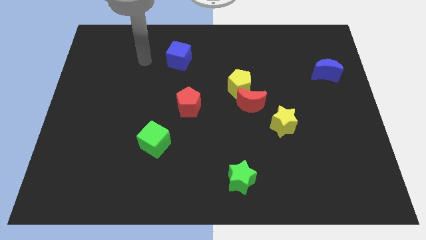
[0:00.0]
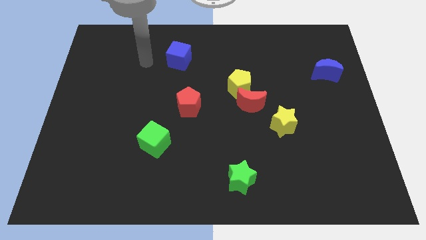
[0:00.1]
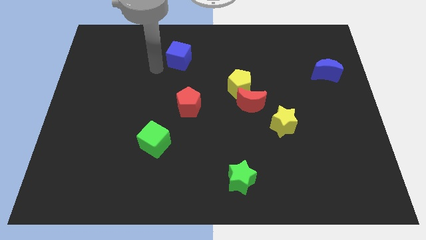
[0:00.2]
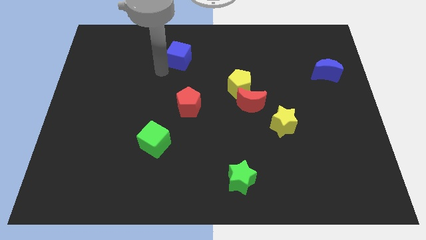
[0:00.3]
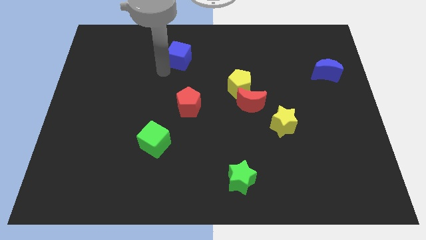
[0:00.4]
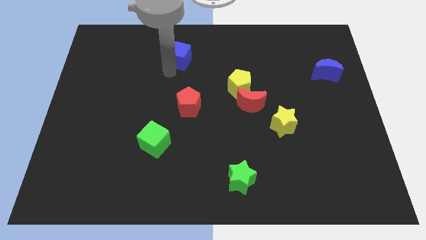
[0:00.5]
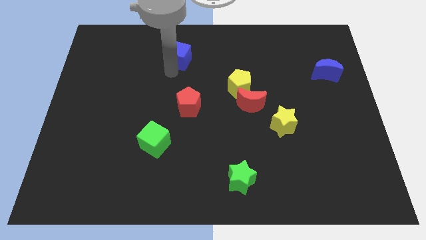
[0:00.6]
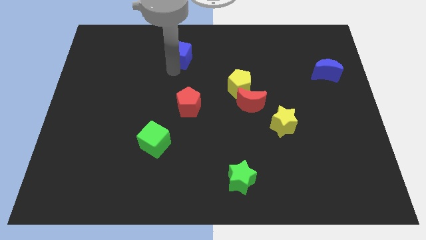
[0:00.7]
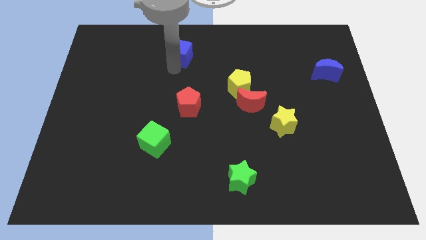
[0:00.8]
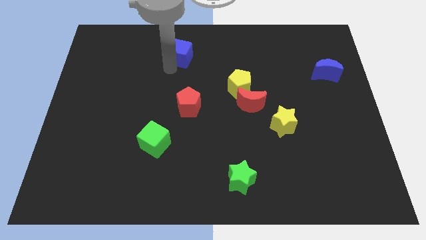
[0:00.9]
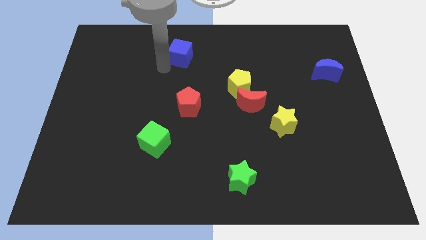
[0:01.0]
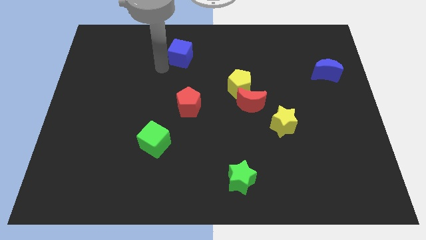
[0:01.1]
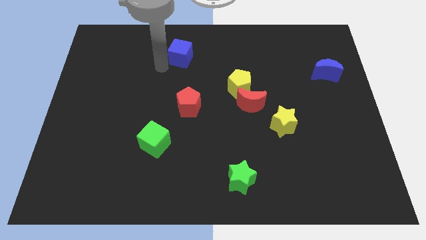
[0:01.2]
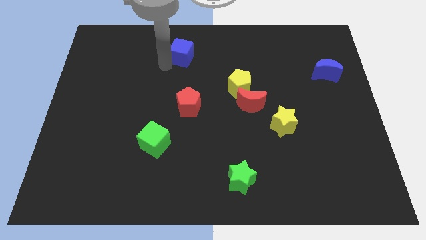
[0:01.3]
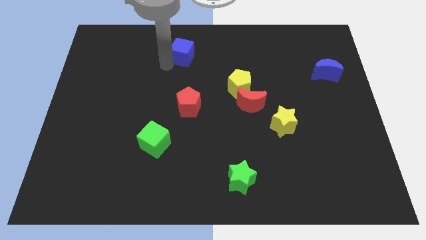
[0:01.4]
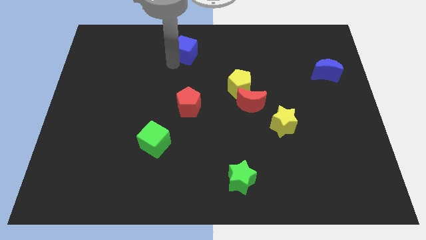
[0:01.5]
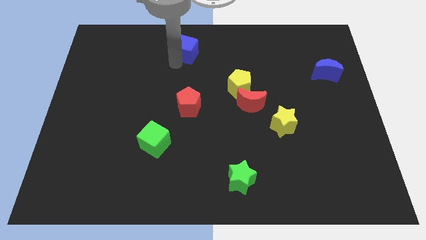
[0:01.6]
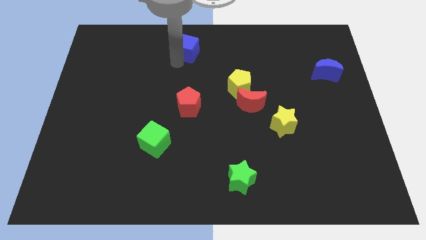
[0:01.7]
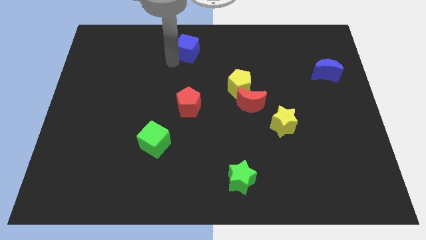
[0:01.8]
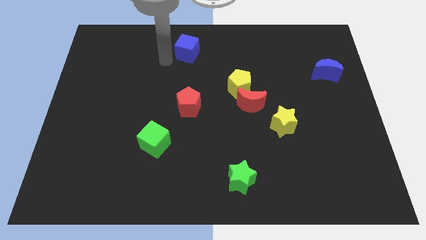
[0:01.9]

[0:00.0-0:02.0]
put the blue cube vertically above the red pentagon

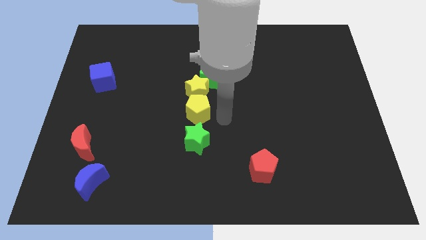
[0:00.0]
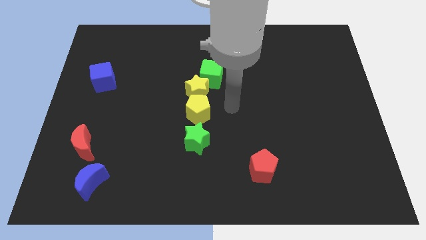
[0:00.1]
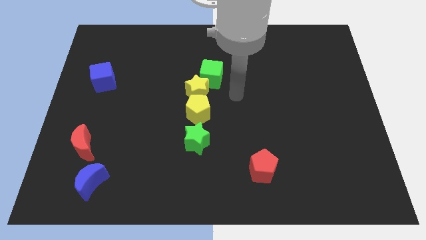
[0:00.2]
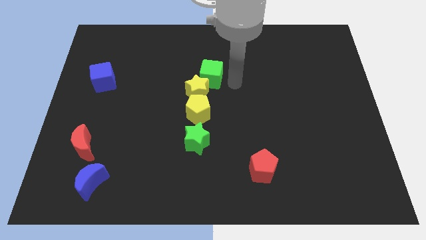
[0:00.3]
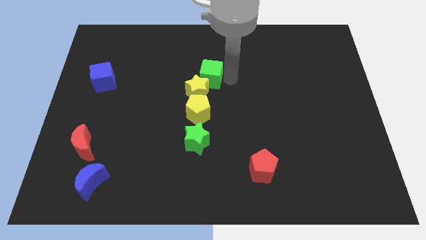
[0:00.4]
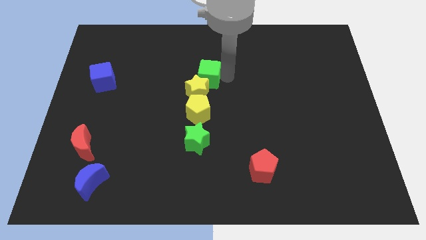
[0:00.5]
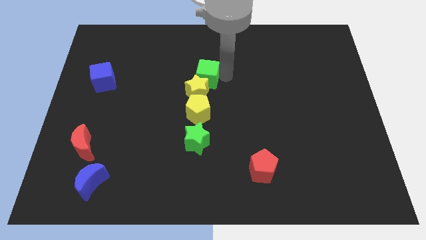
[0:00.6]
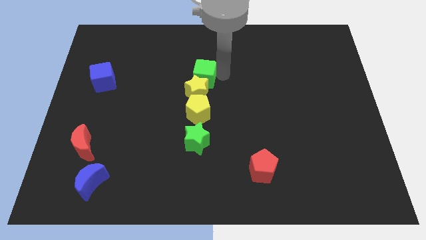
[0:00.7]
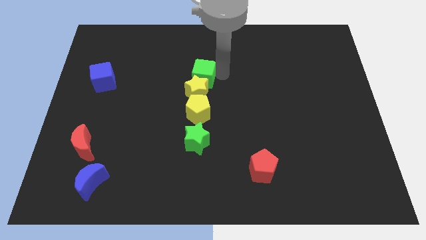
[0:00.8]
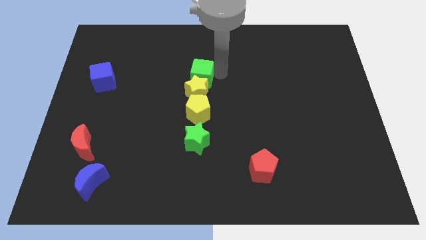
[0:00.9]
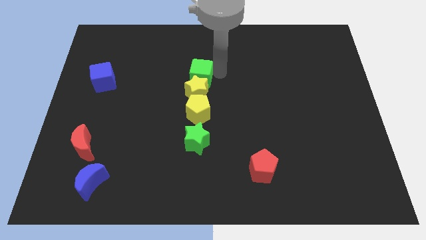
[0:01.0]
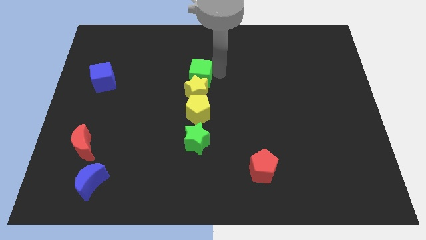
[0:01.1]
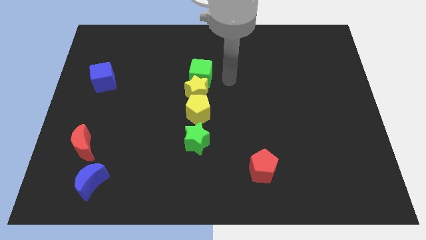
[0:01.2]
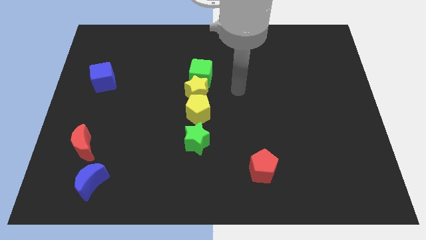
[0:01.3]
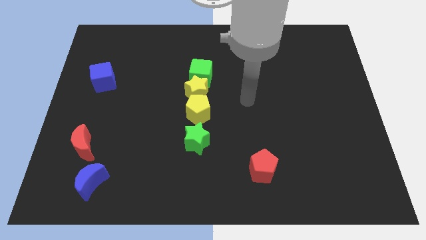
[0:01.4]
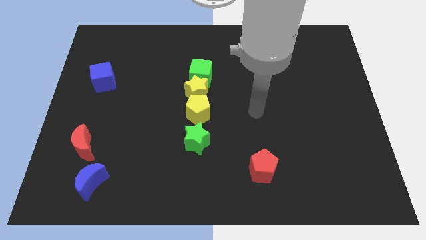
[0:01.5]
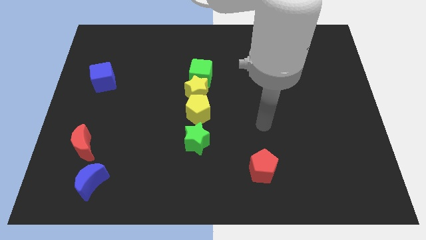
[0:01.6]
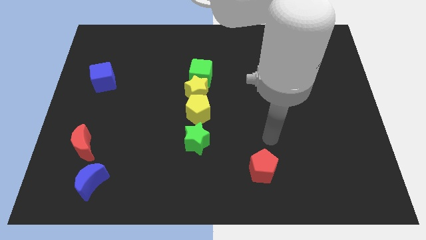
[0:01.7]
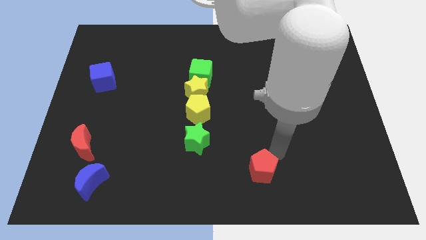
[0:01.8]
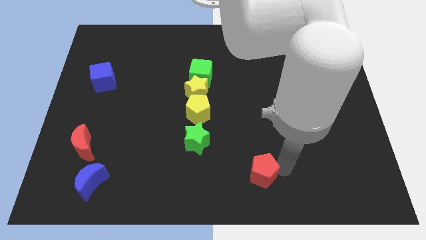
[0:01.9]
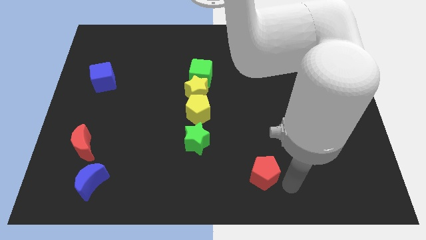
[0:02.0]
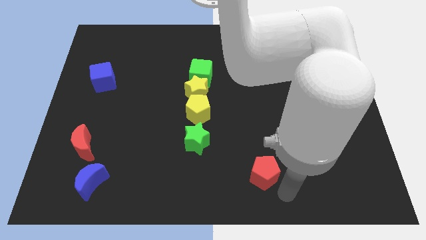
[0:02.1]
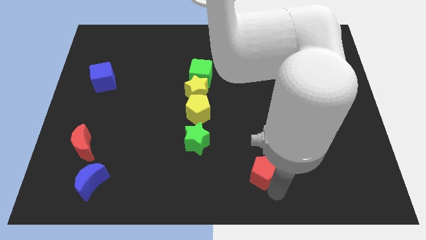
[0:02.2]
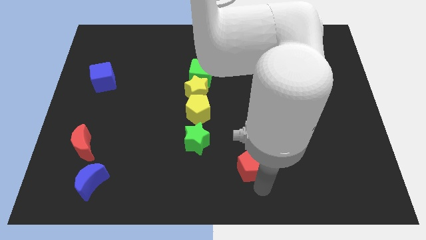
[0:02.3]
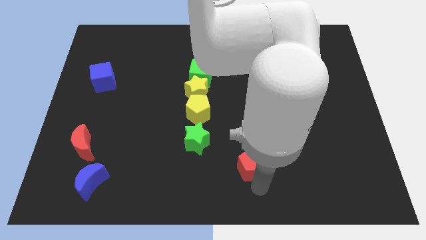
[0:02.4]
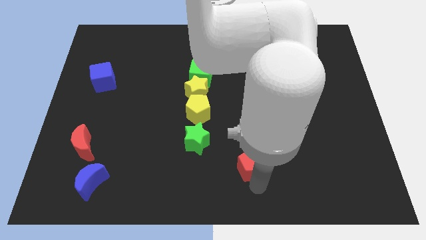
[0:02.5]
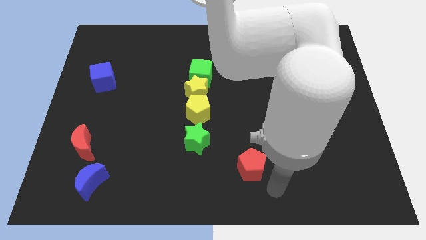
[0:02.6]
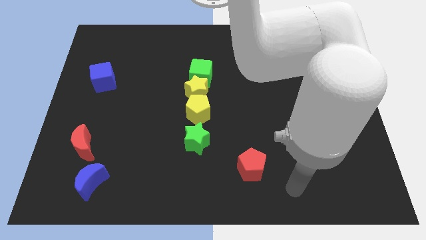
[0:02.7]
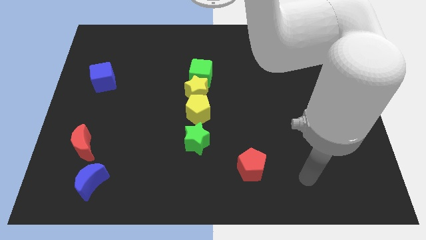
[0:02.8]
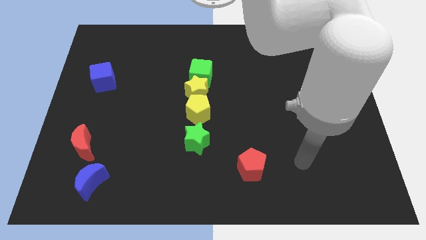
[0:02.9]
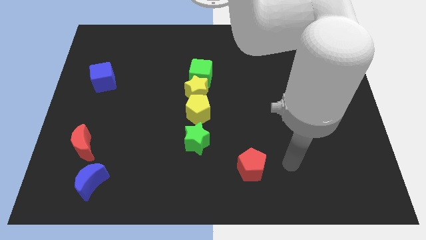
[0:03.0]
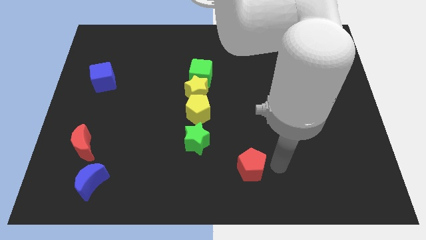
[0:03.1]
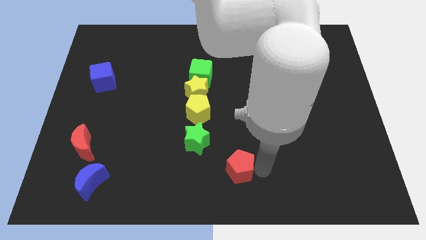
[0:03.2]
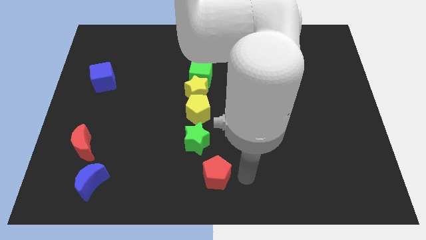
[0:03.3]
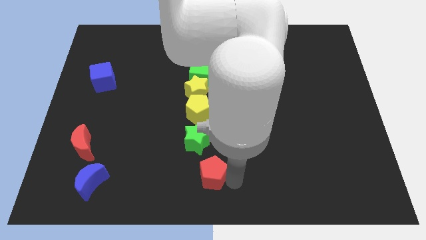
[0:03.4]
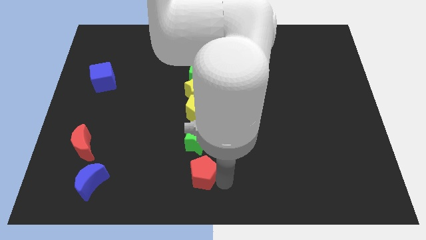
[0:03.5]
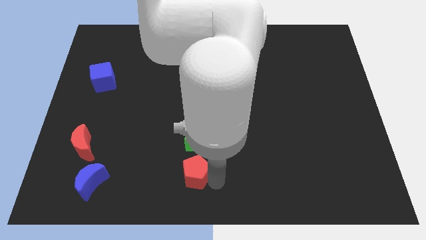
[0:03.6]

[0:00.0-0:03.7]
push the red pentagon to the bottom of the green star

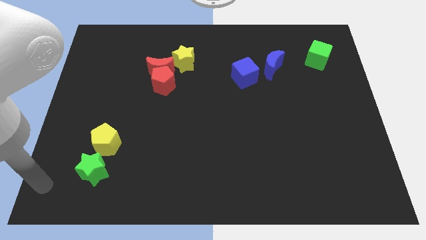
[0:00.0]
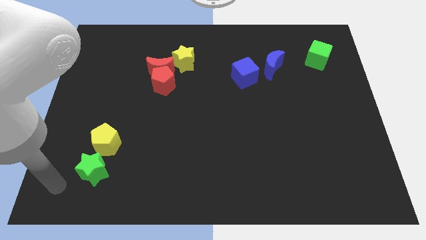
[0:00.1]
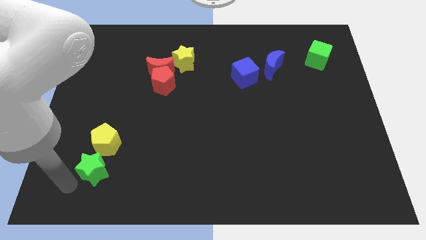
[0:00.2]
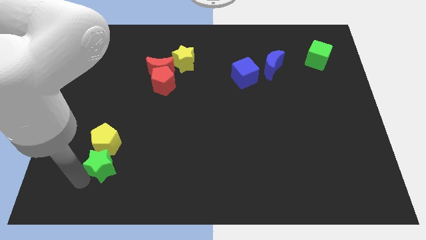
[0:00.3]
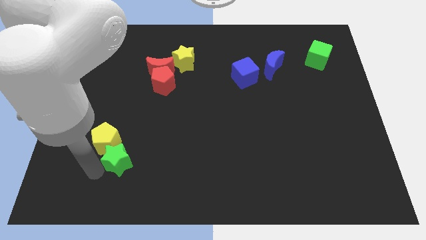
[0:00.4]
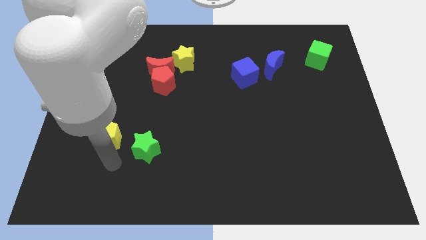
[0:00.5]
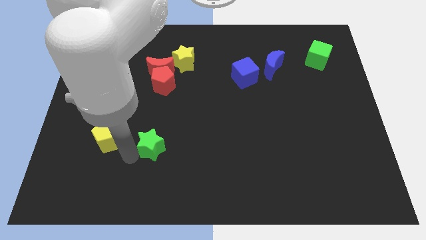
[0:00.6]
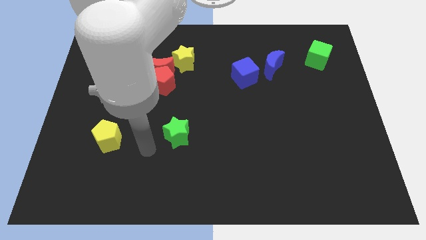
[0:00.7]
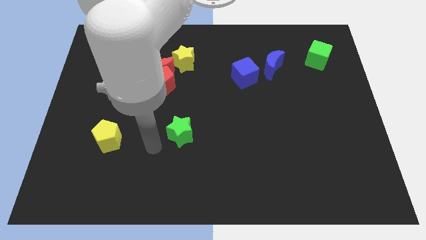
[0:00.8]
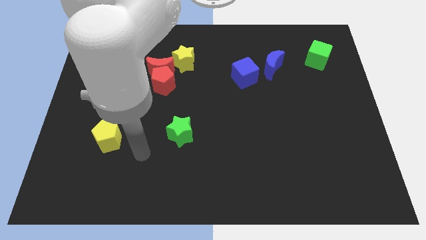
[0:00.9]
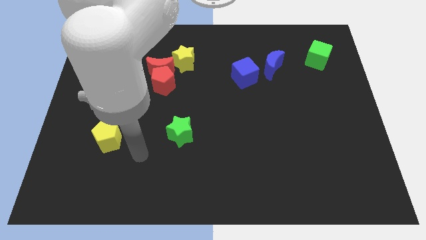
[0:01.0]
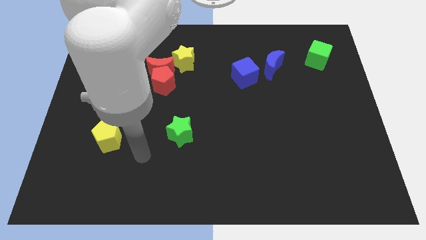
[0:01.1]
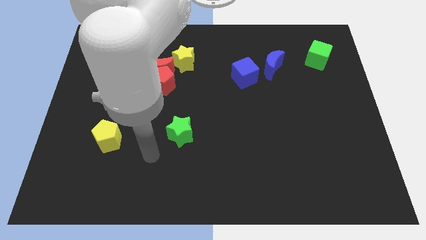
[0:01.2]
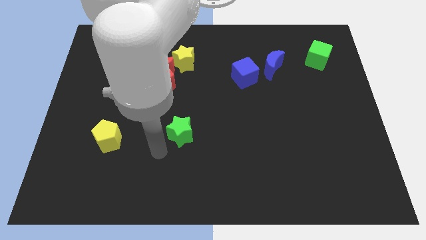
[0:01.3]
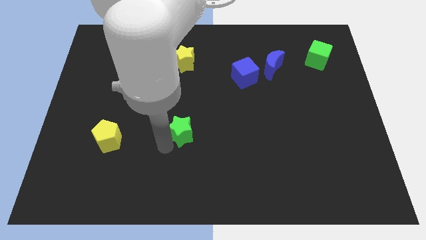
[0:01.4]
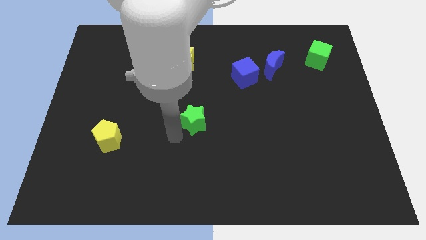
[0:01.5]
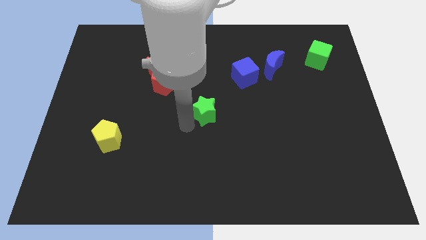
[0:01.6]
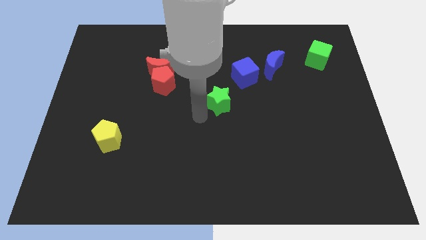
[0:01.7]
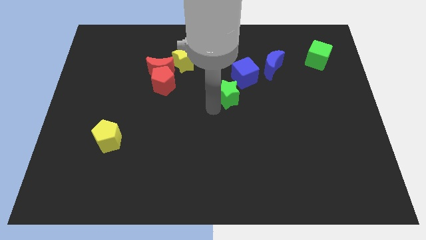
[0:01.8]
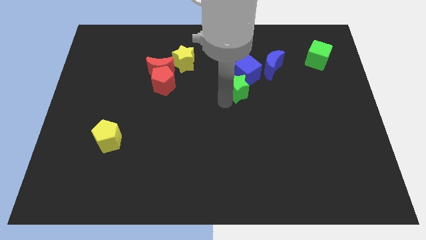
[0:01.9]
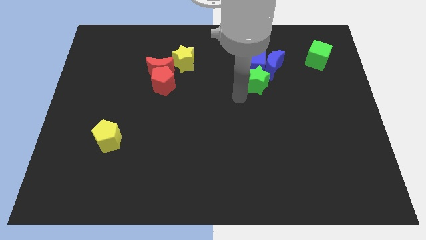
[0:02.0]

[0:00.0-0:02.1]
separate green star from yellow pentagon

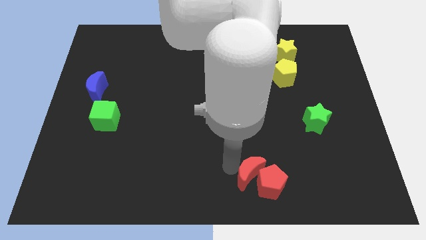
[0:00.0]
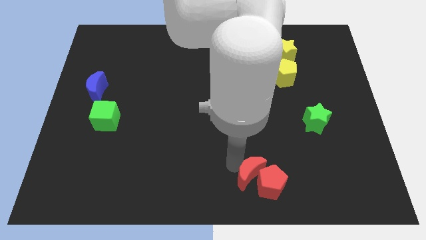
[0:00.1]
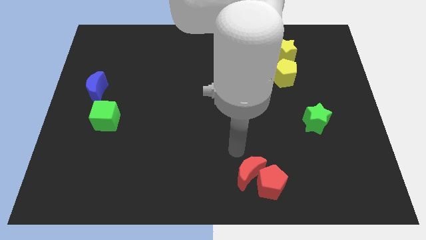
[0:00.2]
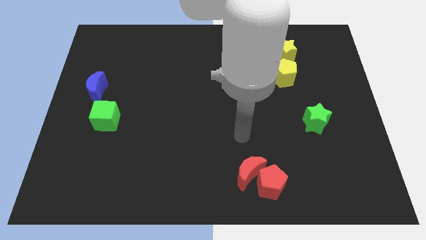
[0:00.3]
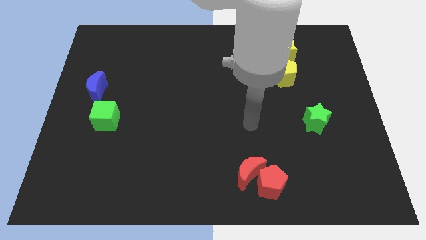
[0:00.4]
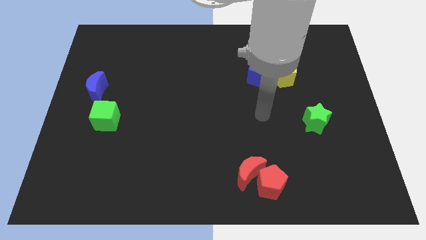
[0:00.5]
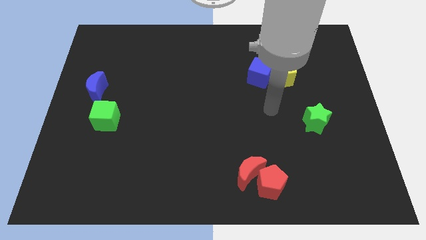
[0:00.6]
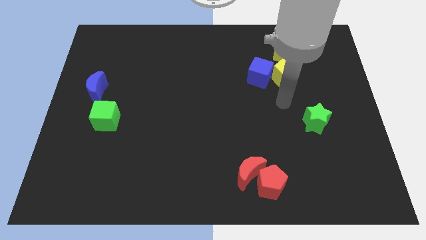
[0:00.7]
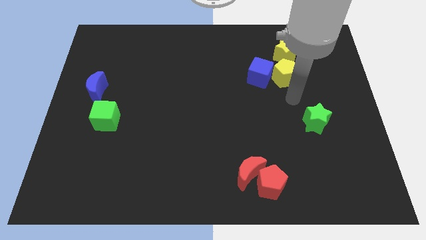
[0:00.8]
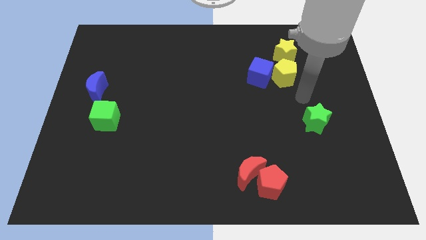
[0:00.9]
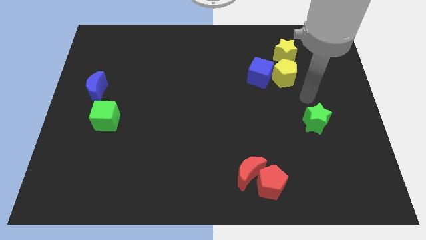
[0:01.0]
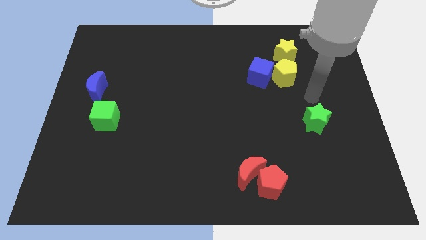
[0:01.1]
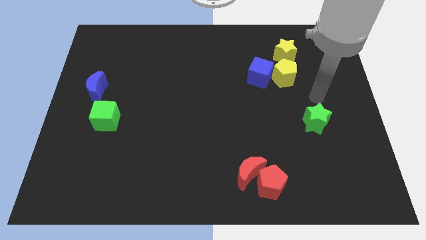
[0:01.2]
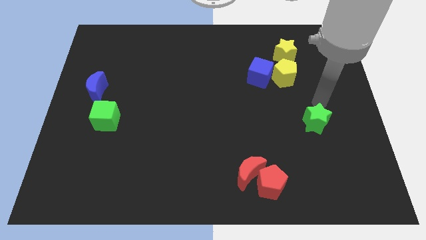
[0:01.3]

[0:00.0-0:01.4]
point your arm above the green star
